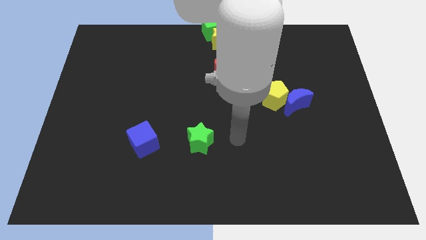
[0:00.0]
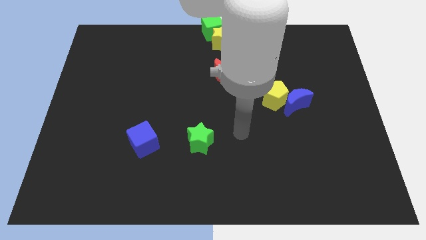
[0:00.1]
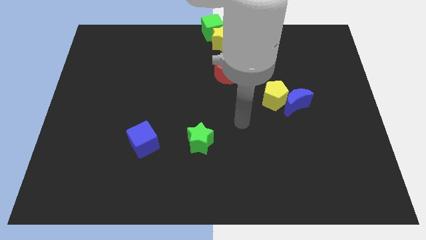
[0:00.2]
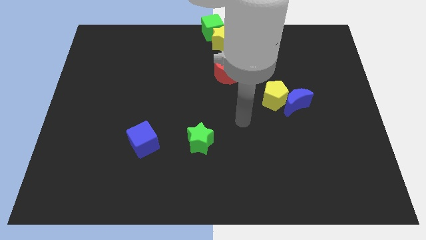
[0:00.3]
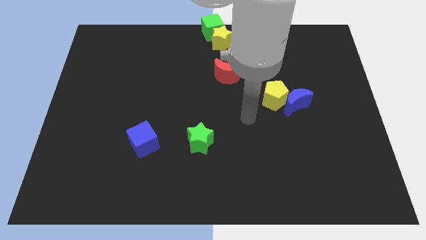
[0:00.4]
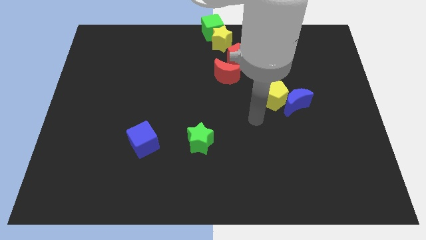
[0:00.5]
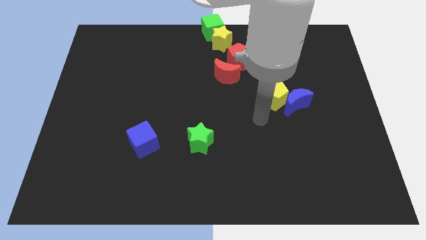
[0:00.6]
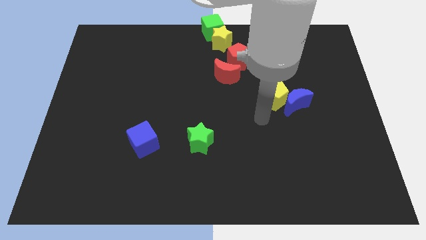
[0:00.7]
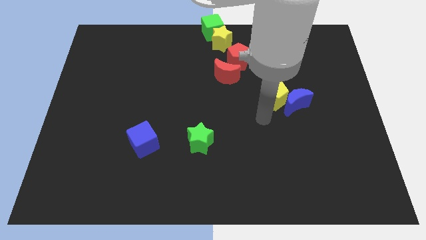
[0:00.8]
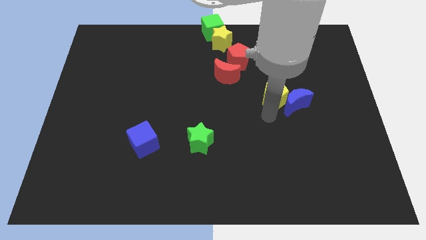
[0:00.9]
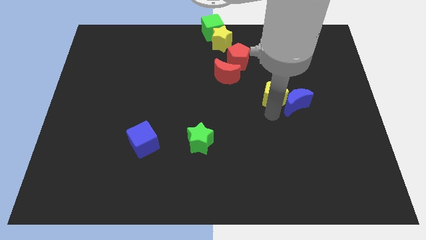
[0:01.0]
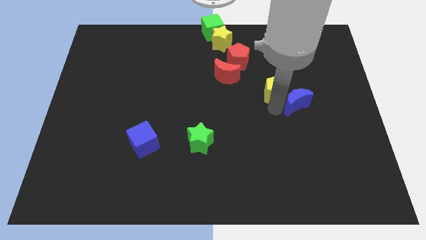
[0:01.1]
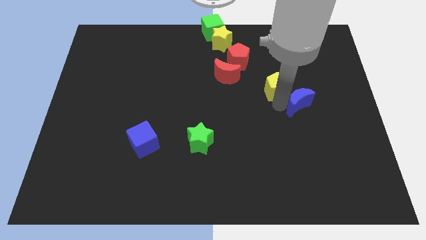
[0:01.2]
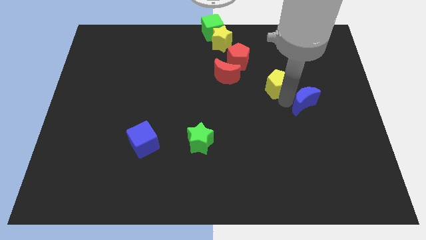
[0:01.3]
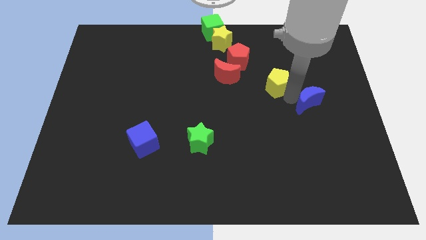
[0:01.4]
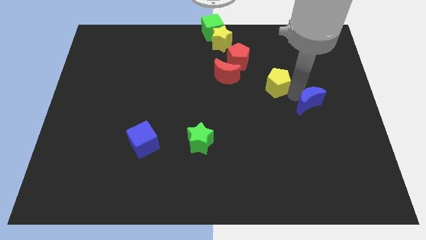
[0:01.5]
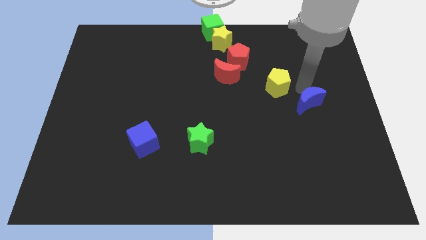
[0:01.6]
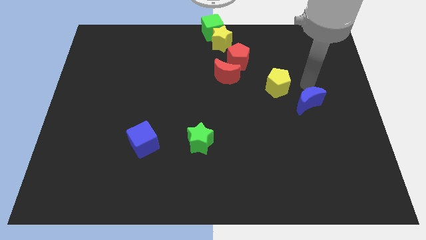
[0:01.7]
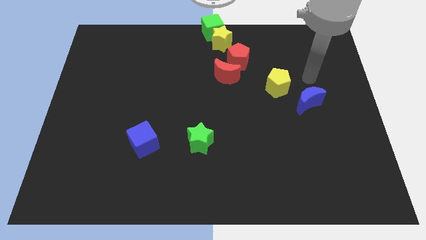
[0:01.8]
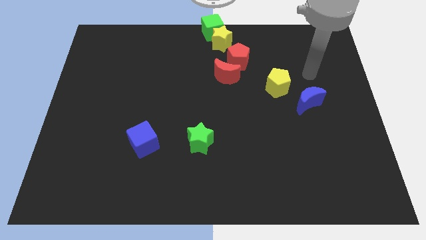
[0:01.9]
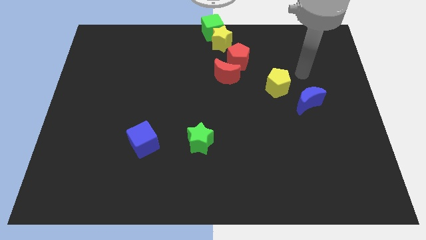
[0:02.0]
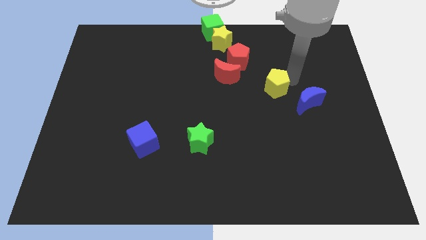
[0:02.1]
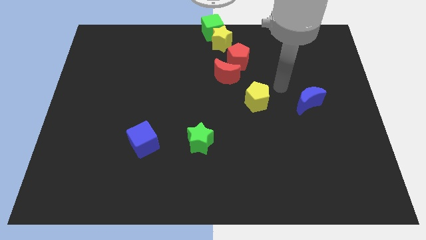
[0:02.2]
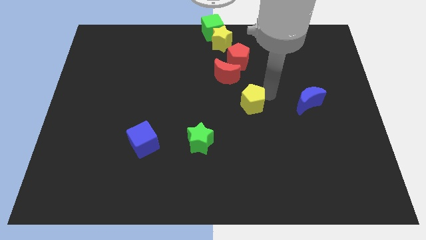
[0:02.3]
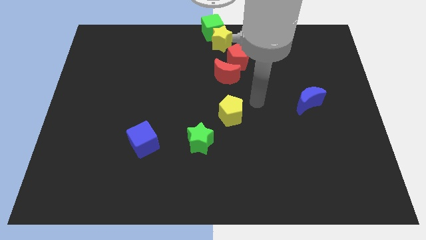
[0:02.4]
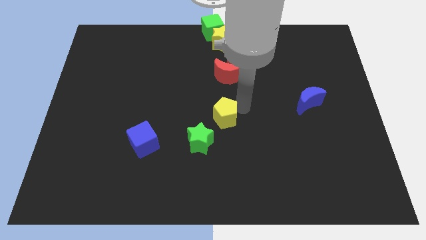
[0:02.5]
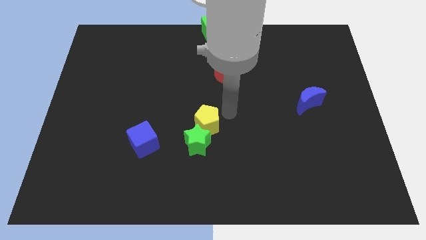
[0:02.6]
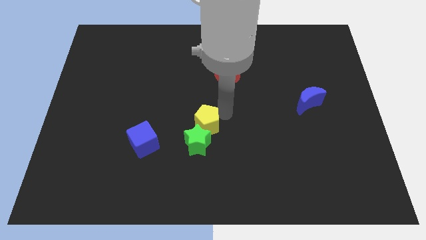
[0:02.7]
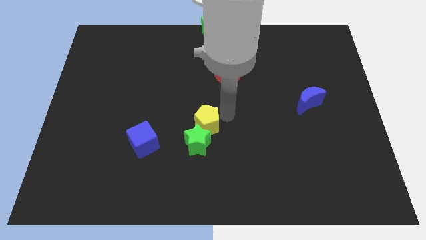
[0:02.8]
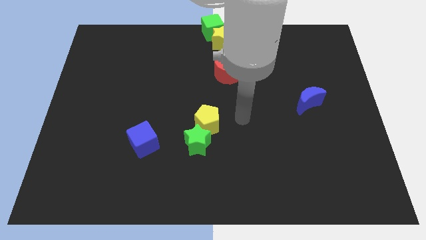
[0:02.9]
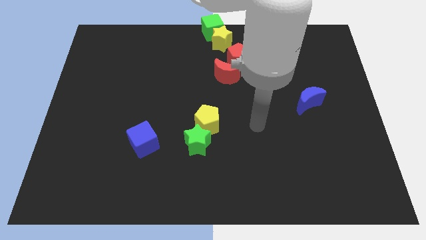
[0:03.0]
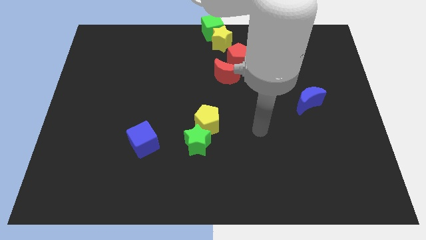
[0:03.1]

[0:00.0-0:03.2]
separate the yellow pentagon and the blue crescent

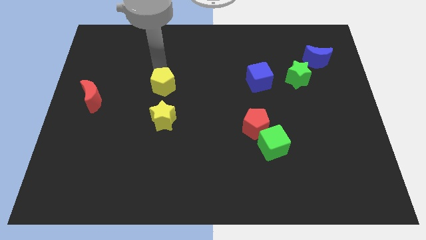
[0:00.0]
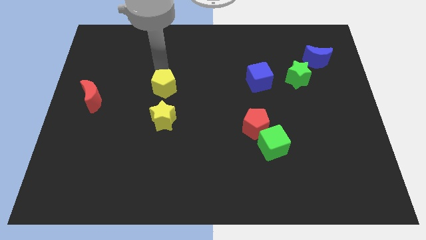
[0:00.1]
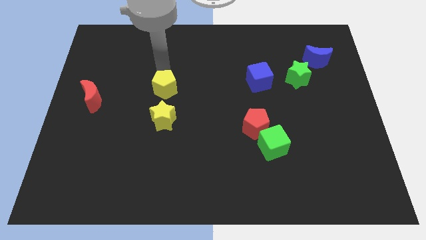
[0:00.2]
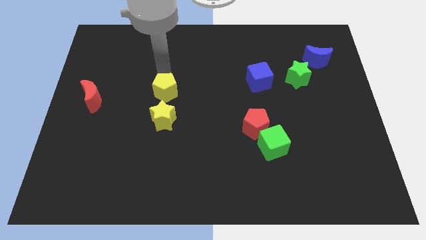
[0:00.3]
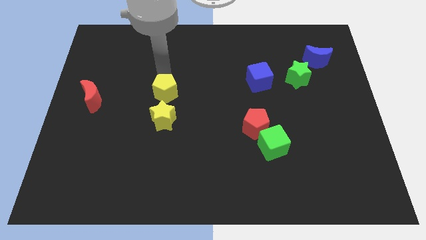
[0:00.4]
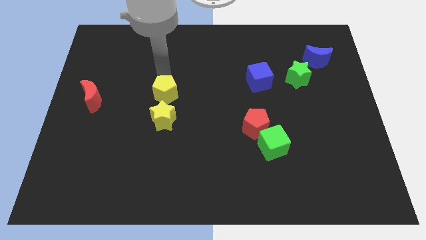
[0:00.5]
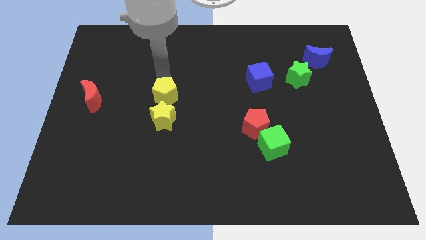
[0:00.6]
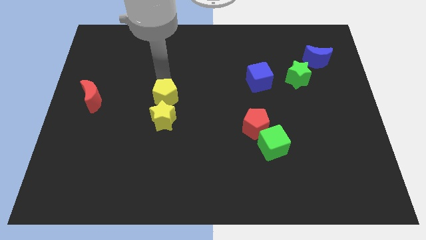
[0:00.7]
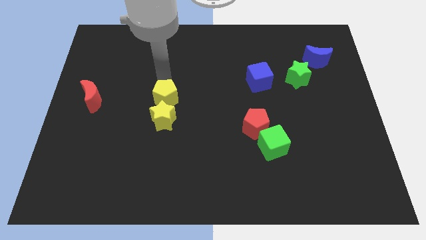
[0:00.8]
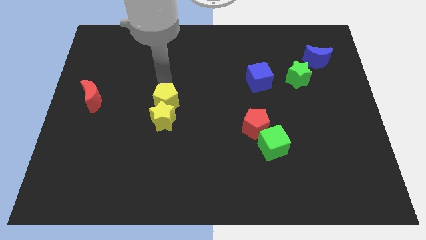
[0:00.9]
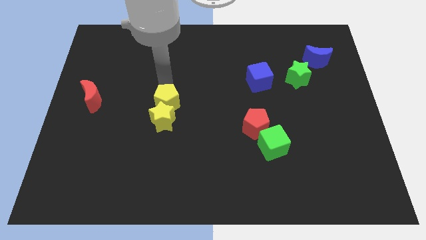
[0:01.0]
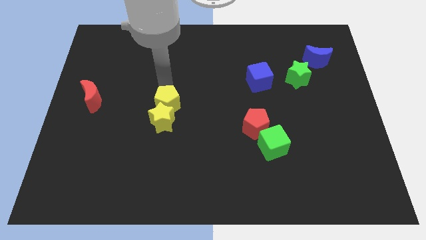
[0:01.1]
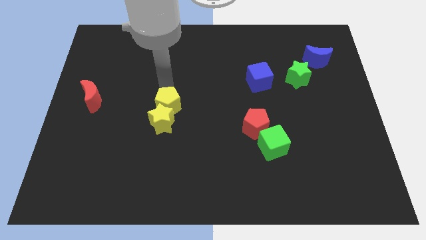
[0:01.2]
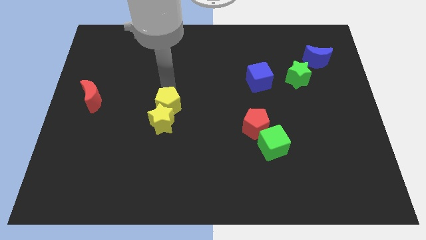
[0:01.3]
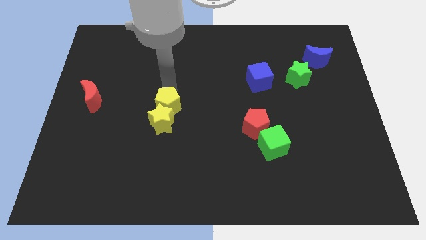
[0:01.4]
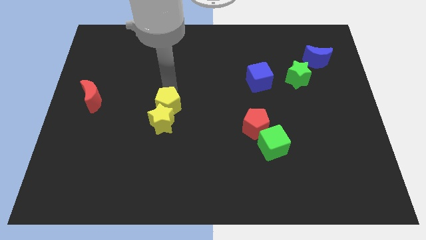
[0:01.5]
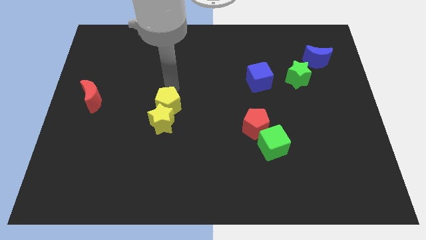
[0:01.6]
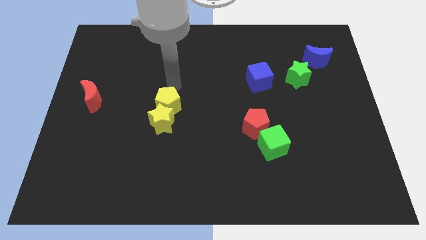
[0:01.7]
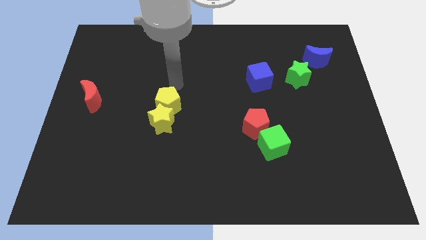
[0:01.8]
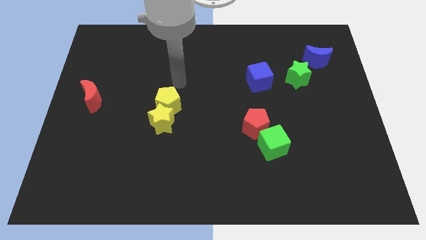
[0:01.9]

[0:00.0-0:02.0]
move the yellow pentagon diagonally right to the yellow star

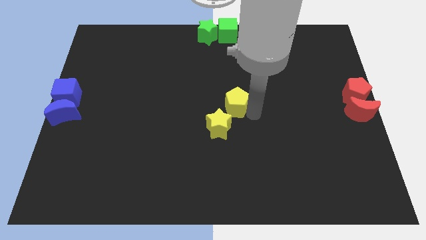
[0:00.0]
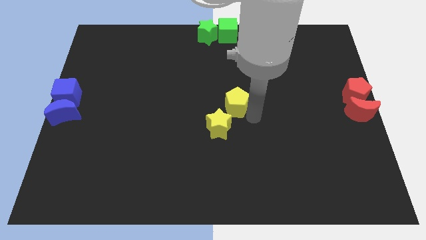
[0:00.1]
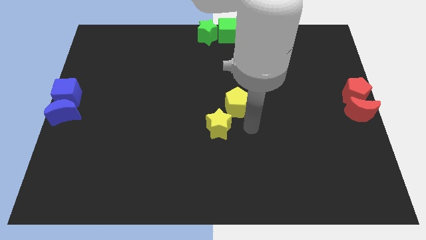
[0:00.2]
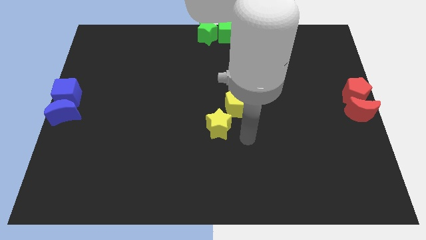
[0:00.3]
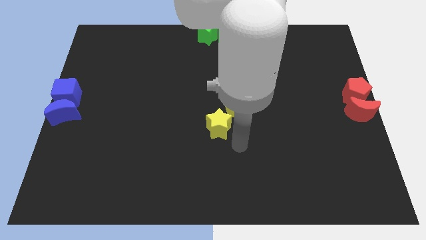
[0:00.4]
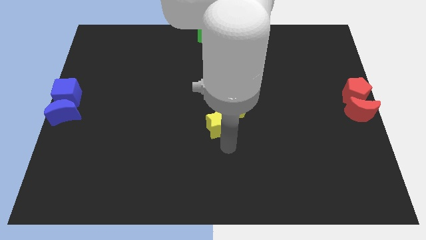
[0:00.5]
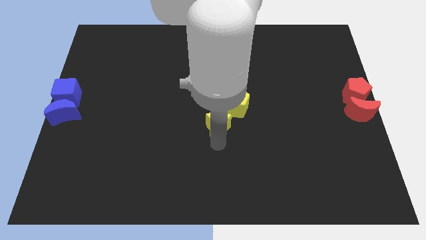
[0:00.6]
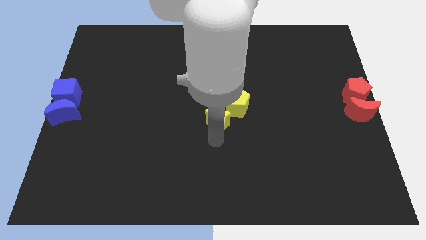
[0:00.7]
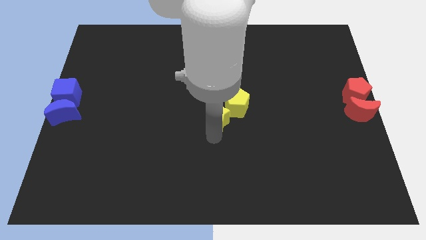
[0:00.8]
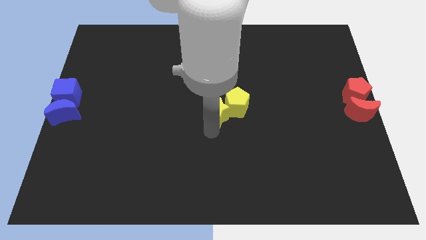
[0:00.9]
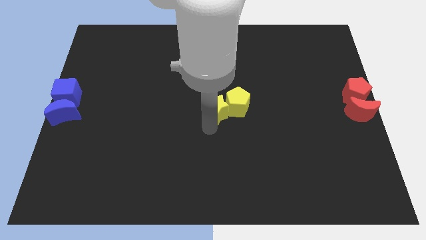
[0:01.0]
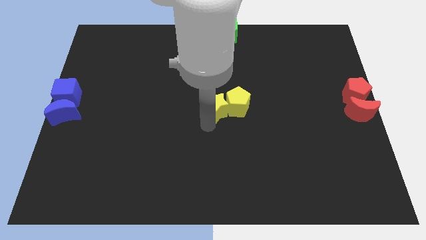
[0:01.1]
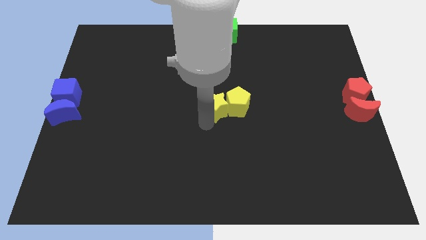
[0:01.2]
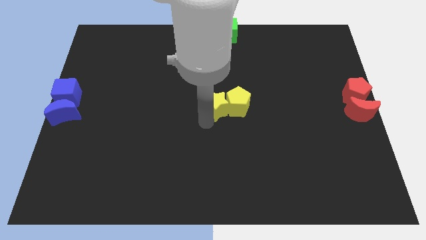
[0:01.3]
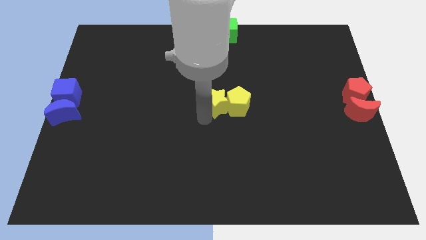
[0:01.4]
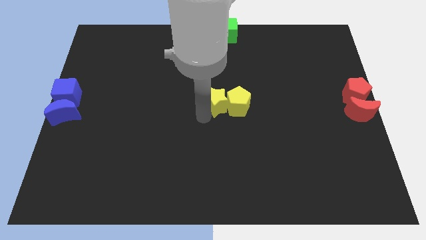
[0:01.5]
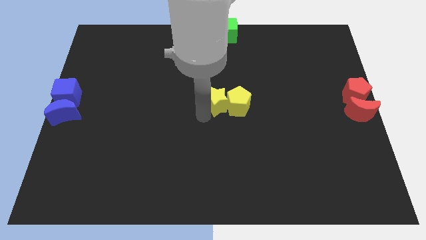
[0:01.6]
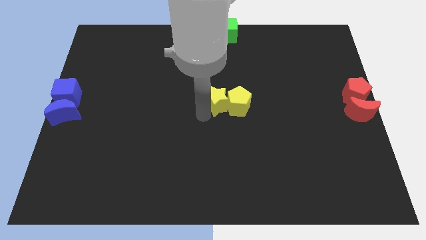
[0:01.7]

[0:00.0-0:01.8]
place yellow star left to yellow pentagon

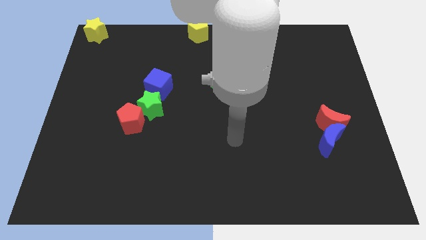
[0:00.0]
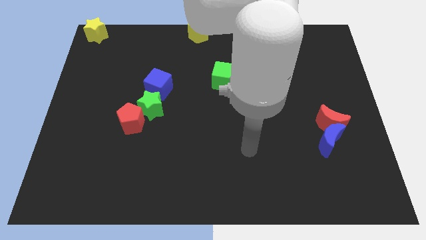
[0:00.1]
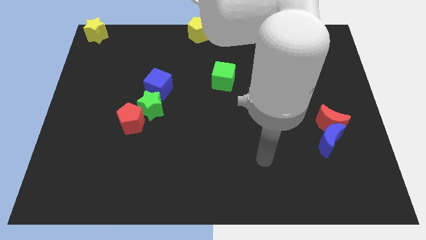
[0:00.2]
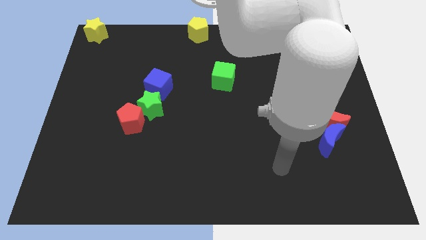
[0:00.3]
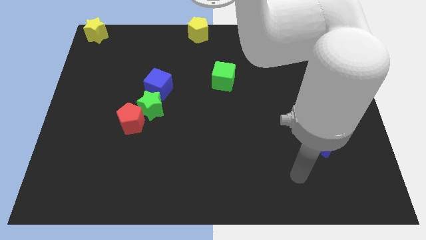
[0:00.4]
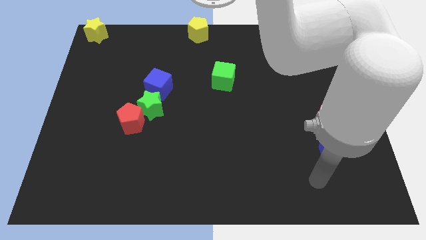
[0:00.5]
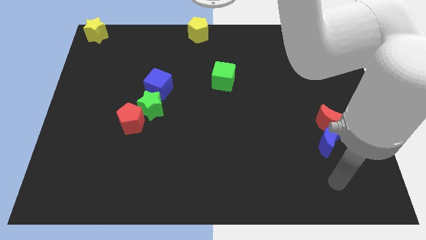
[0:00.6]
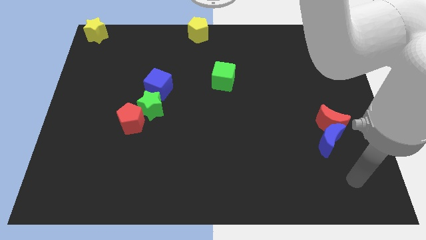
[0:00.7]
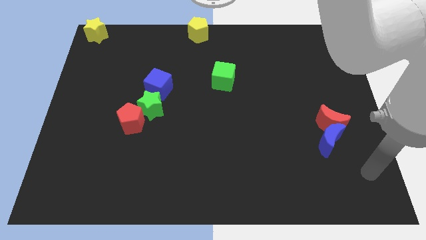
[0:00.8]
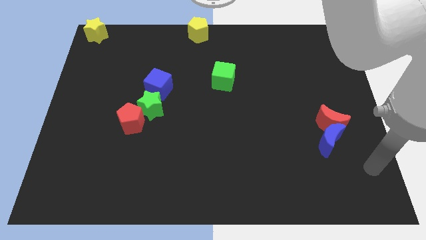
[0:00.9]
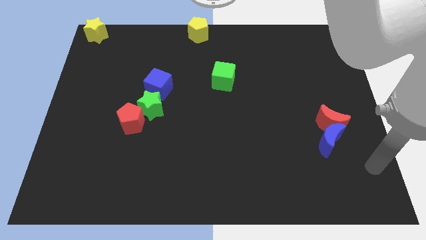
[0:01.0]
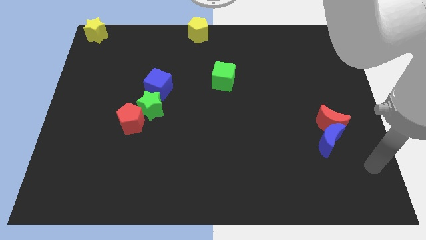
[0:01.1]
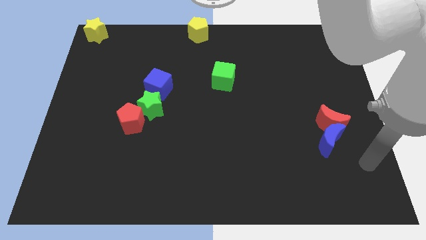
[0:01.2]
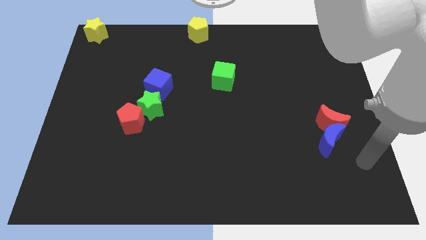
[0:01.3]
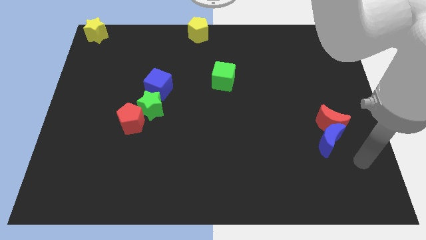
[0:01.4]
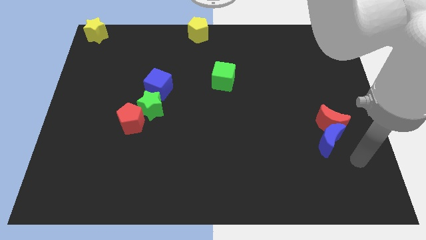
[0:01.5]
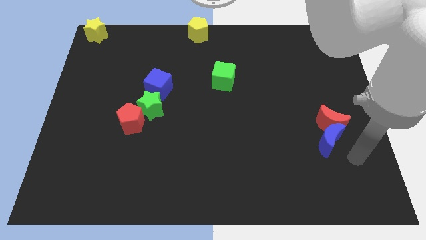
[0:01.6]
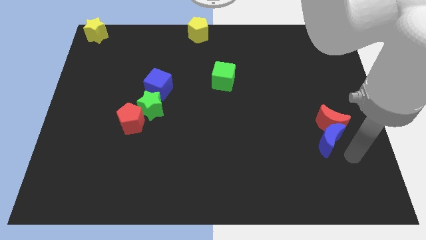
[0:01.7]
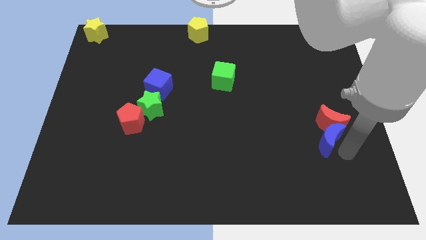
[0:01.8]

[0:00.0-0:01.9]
place your arm to the bottom of blue moon
